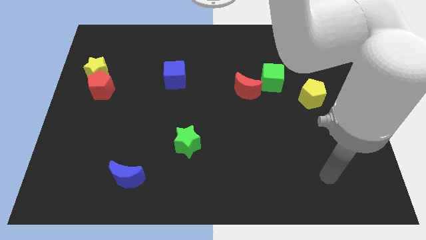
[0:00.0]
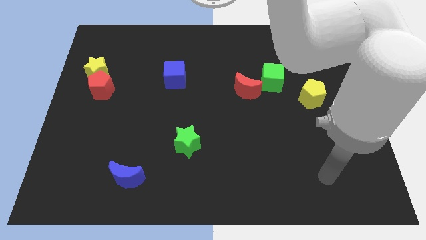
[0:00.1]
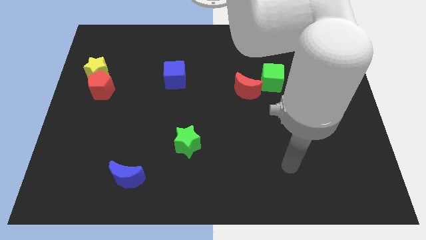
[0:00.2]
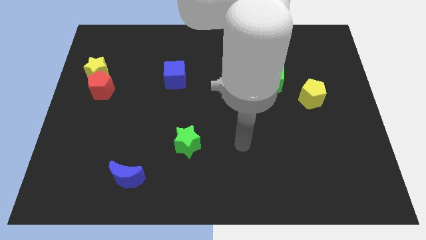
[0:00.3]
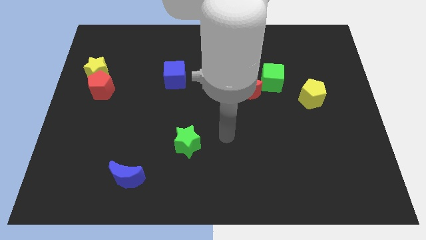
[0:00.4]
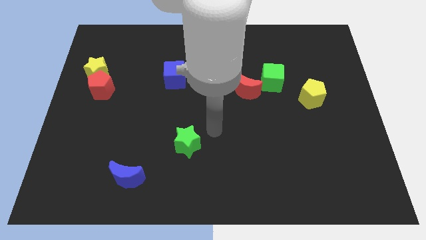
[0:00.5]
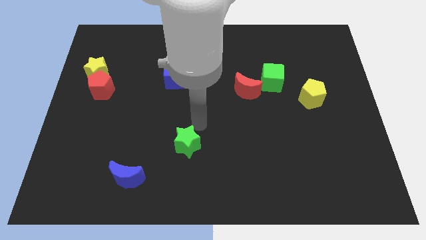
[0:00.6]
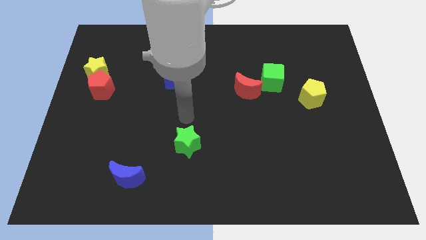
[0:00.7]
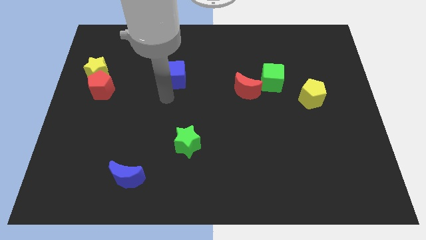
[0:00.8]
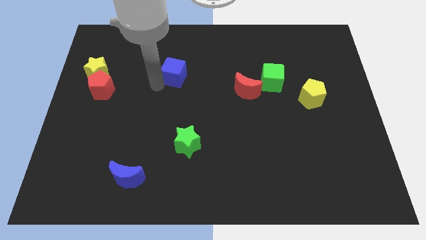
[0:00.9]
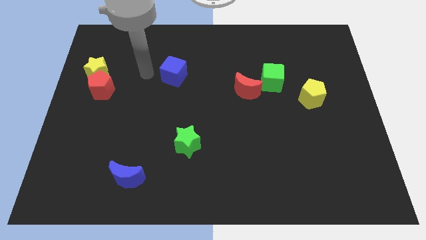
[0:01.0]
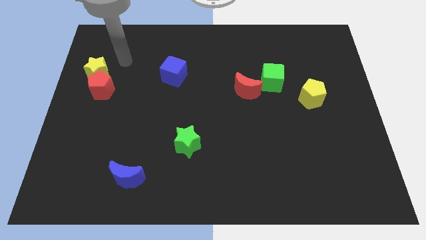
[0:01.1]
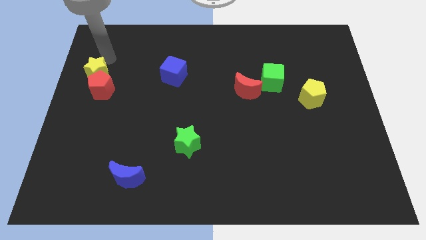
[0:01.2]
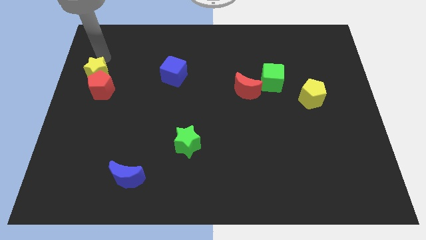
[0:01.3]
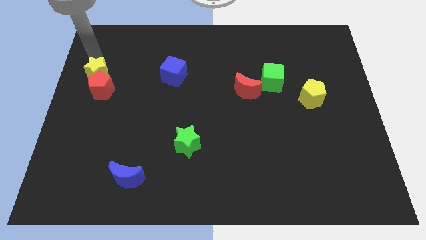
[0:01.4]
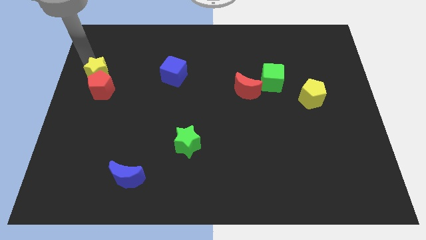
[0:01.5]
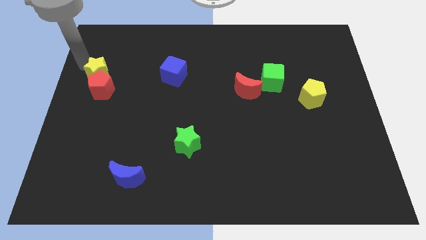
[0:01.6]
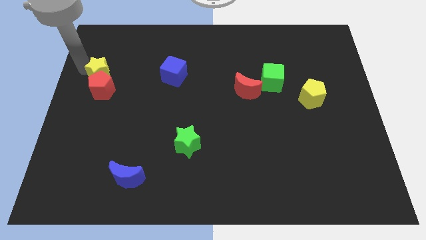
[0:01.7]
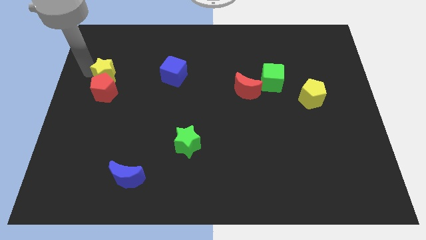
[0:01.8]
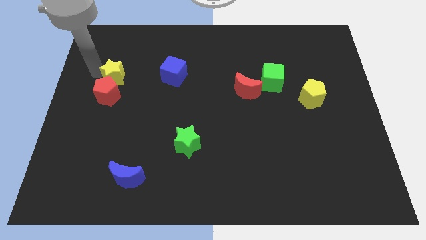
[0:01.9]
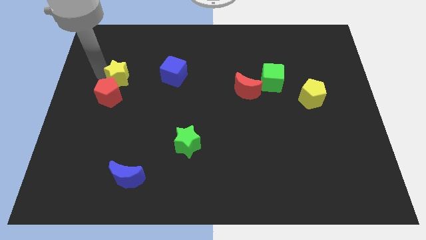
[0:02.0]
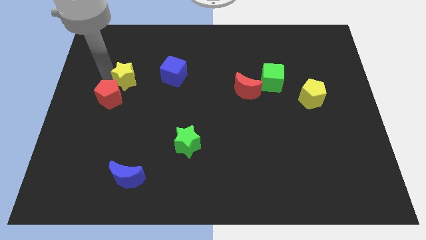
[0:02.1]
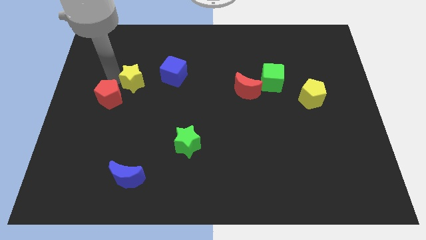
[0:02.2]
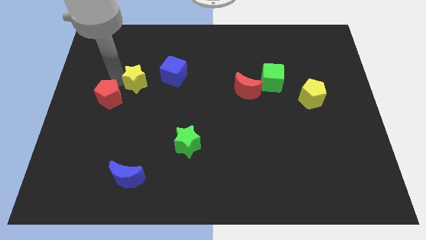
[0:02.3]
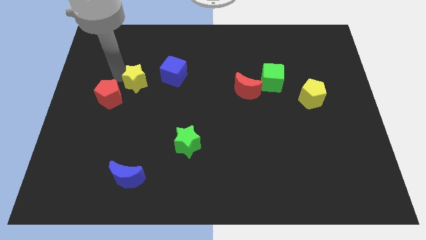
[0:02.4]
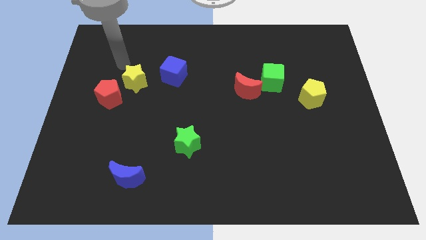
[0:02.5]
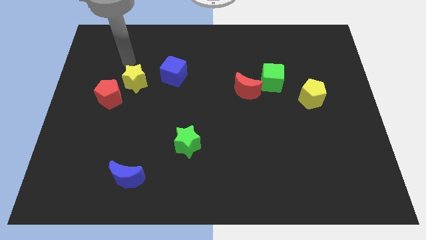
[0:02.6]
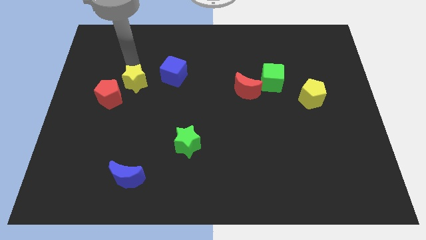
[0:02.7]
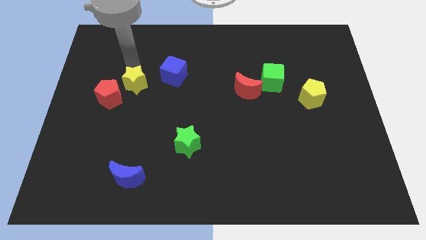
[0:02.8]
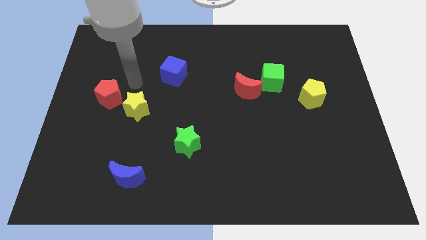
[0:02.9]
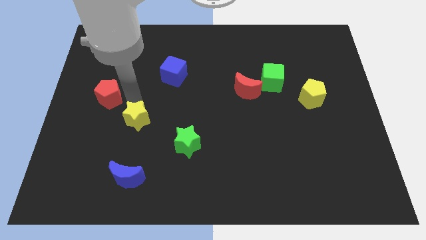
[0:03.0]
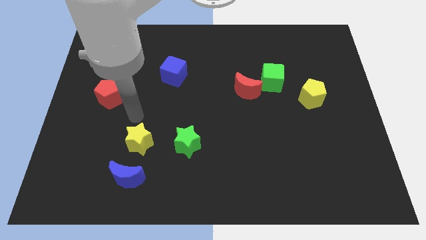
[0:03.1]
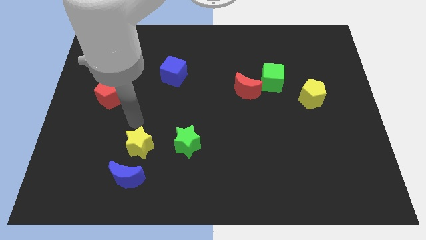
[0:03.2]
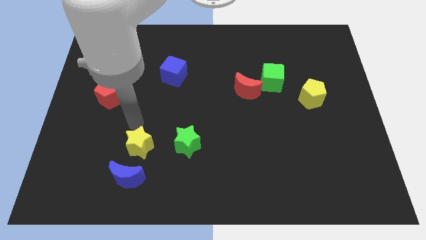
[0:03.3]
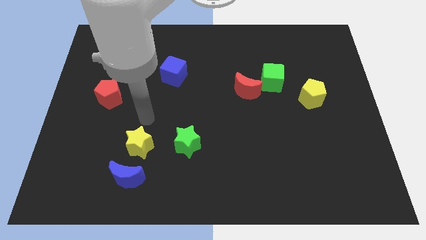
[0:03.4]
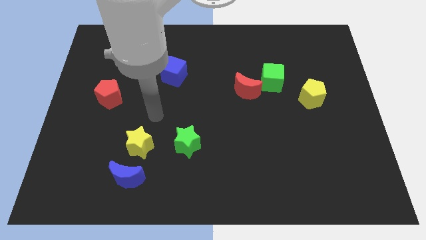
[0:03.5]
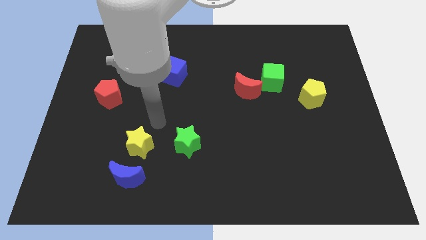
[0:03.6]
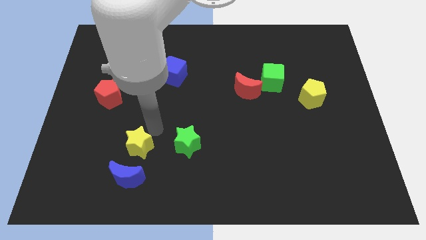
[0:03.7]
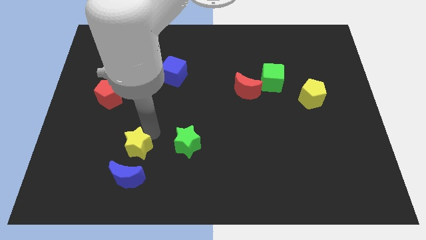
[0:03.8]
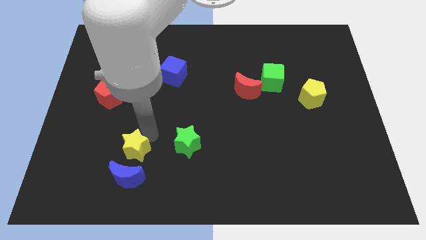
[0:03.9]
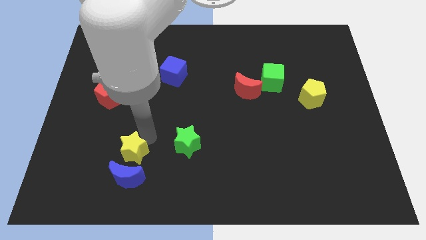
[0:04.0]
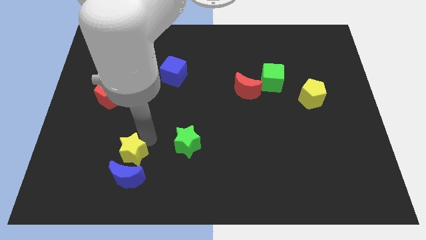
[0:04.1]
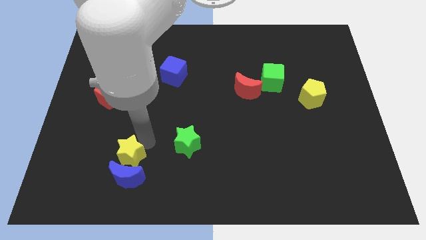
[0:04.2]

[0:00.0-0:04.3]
push the yellow star to the blue moon

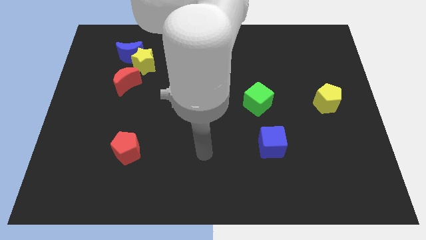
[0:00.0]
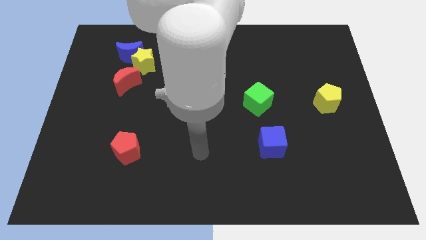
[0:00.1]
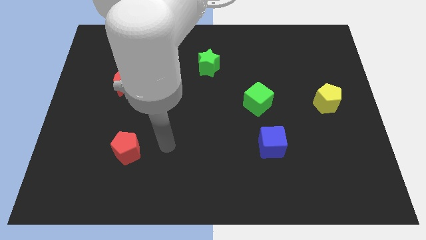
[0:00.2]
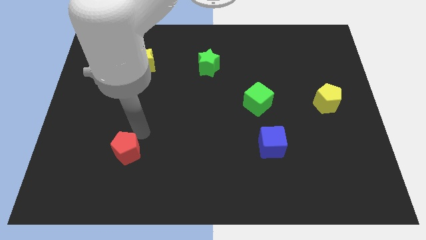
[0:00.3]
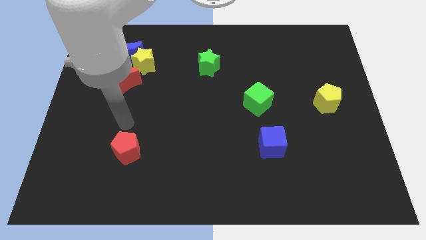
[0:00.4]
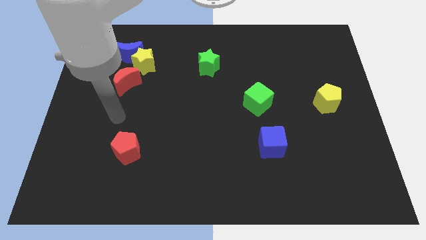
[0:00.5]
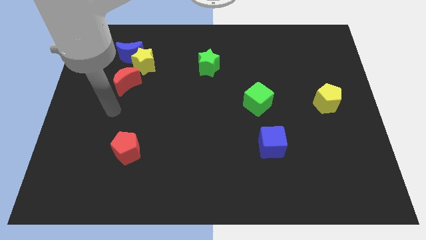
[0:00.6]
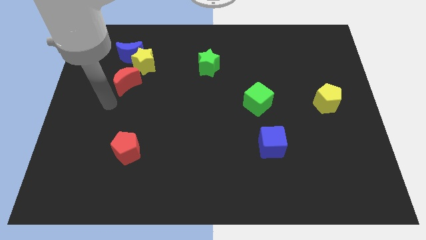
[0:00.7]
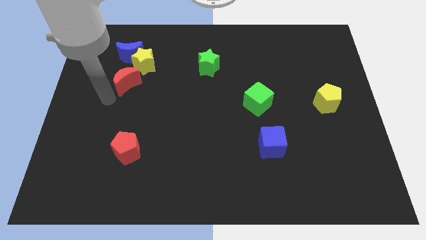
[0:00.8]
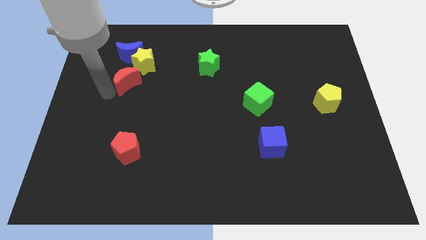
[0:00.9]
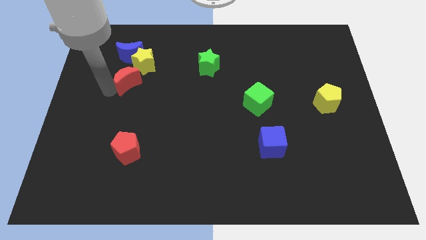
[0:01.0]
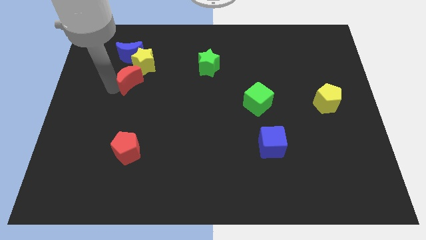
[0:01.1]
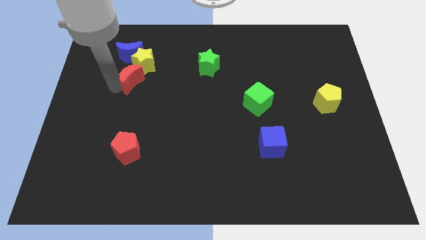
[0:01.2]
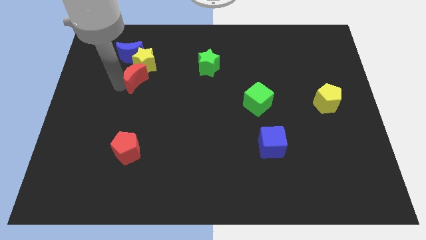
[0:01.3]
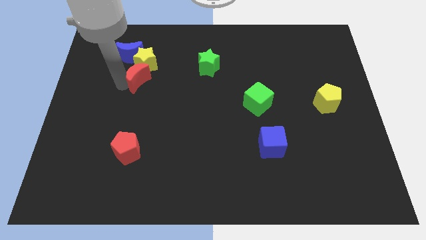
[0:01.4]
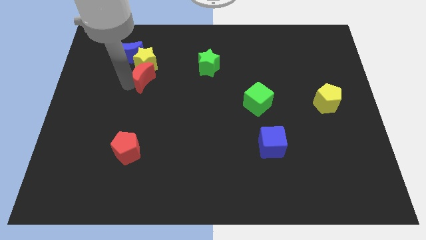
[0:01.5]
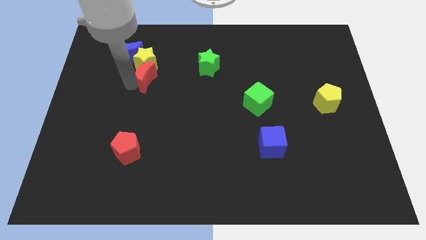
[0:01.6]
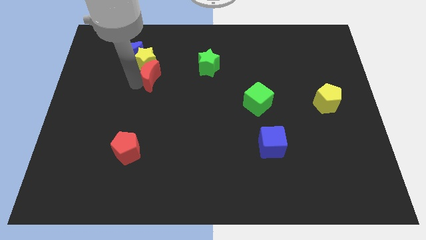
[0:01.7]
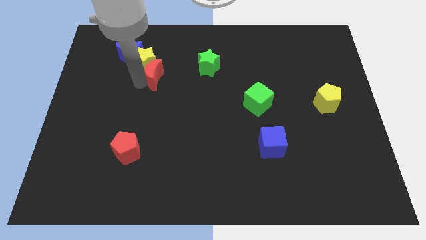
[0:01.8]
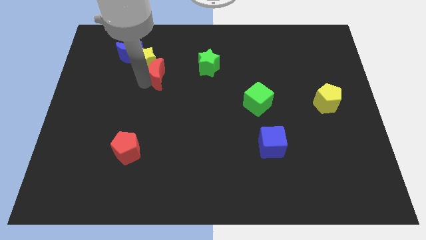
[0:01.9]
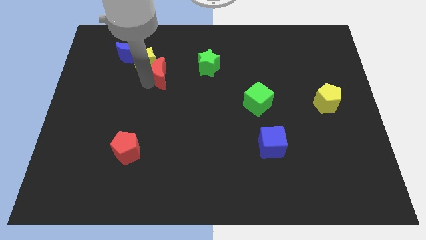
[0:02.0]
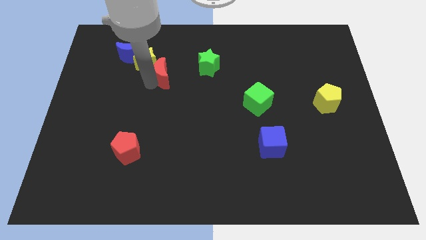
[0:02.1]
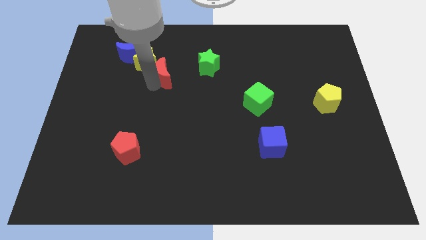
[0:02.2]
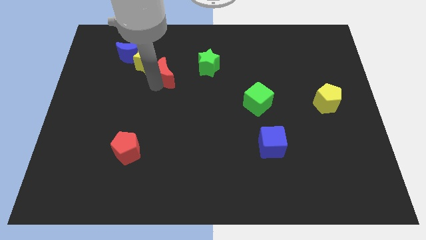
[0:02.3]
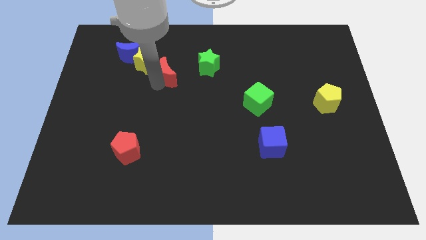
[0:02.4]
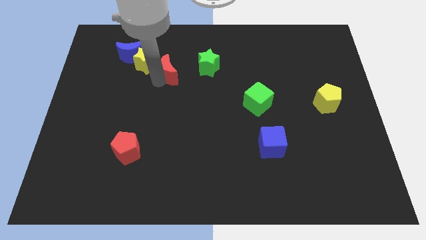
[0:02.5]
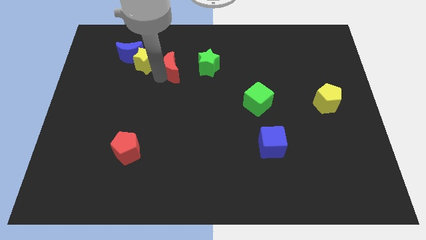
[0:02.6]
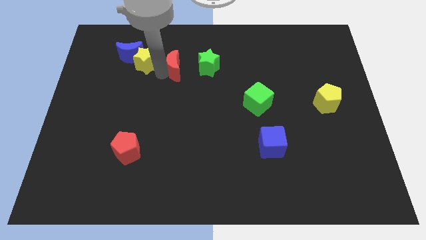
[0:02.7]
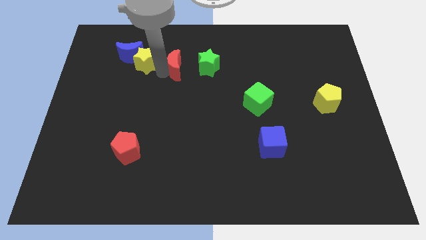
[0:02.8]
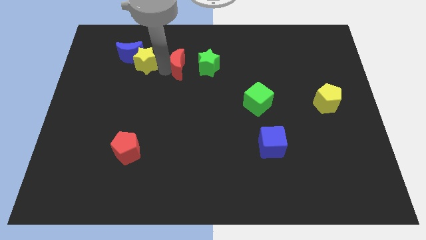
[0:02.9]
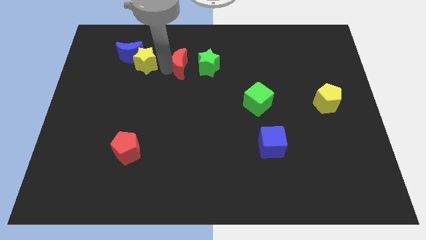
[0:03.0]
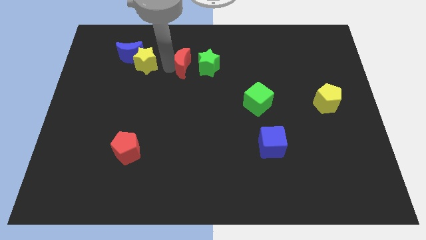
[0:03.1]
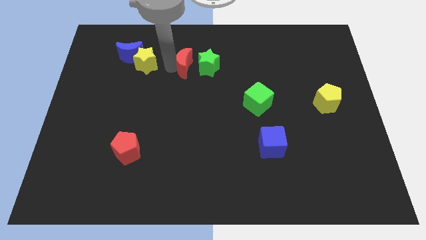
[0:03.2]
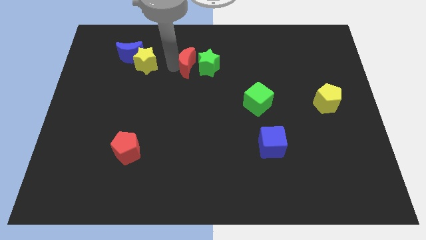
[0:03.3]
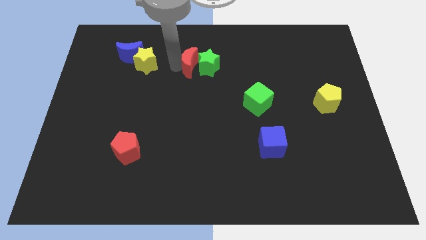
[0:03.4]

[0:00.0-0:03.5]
move the red moon close to the green star

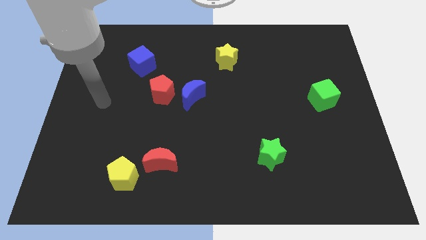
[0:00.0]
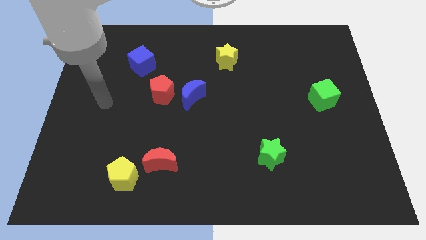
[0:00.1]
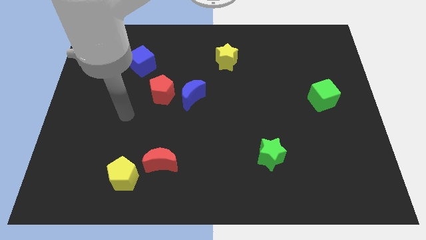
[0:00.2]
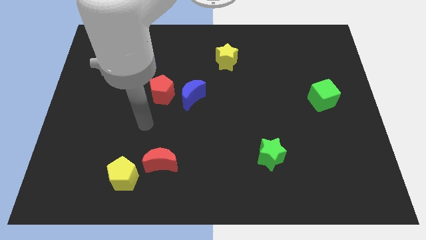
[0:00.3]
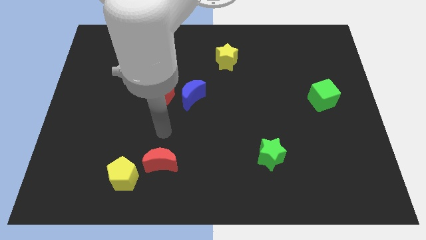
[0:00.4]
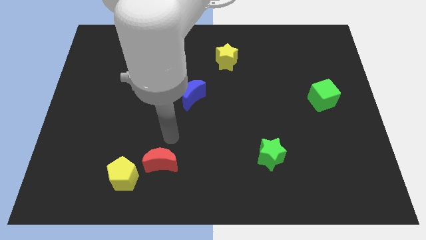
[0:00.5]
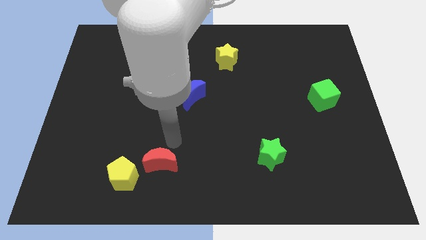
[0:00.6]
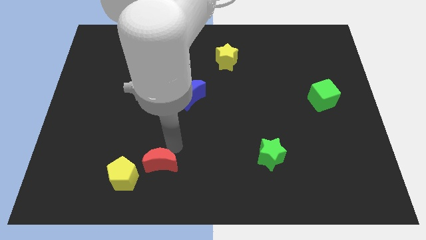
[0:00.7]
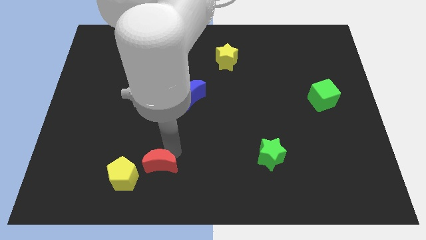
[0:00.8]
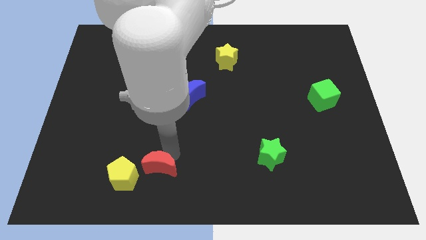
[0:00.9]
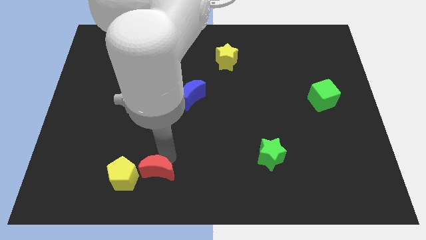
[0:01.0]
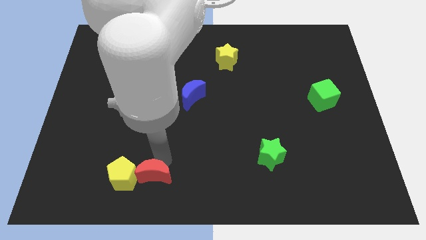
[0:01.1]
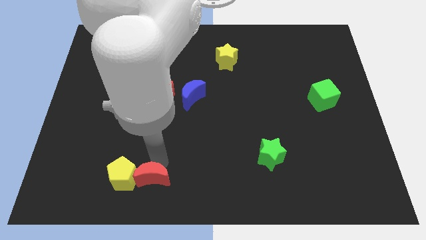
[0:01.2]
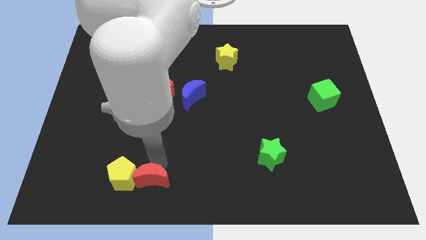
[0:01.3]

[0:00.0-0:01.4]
push the red moon close to the yellow pentagon
